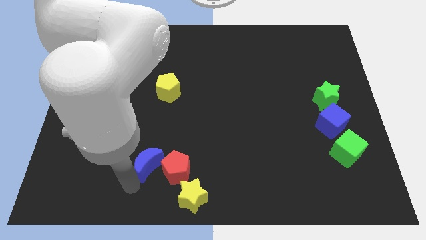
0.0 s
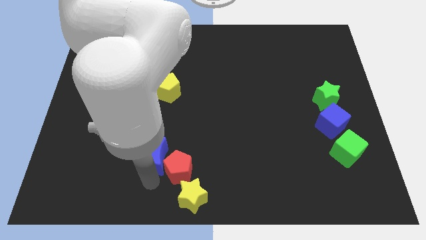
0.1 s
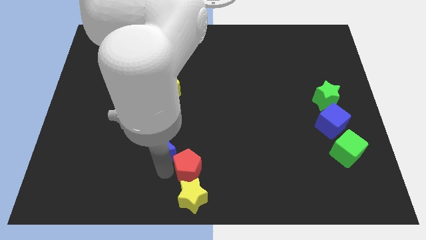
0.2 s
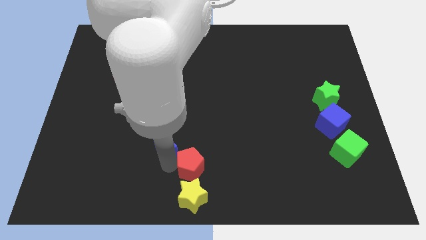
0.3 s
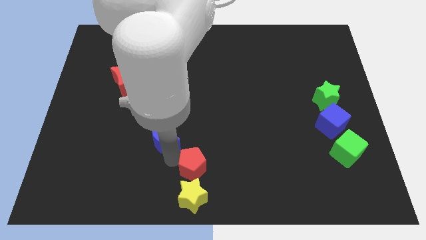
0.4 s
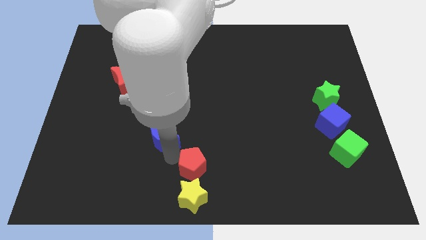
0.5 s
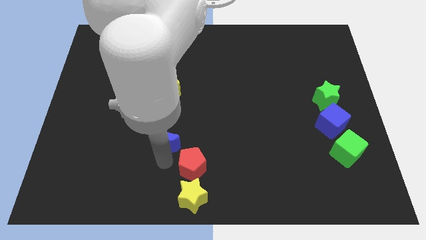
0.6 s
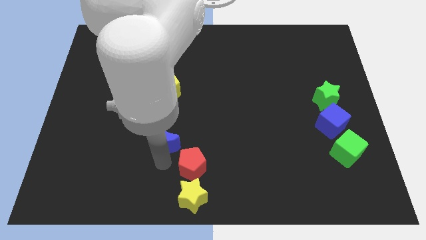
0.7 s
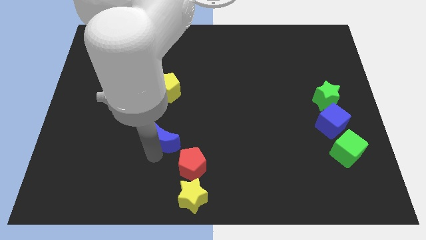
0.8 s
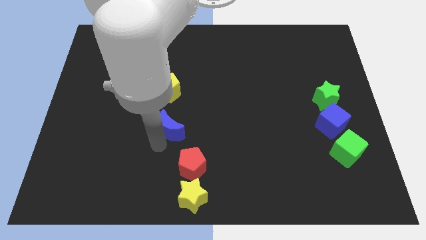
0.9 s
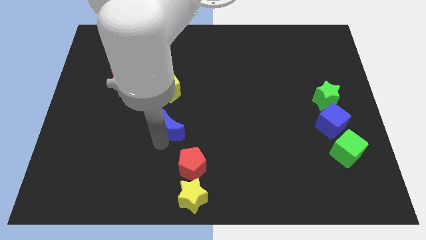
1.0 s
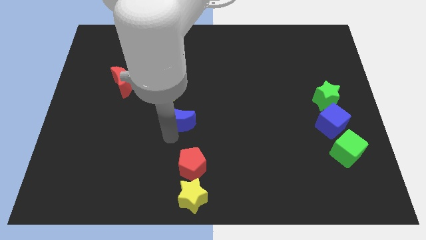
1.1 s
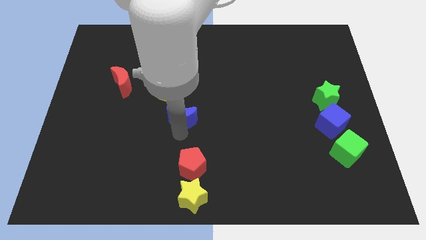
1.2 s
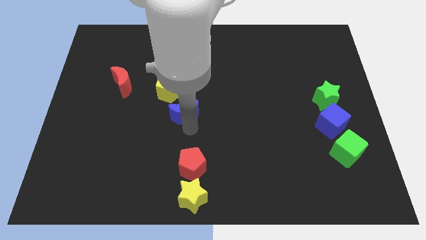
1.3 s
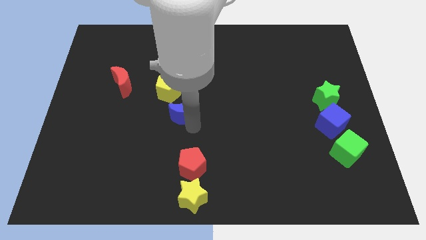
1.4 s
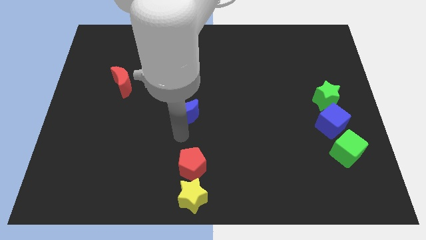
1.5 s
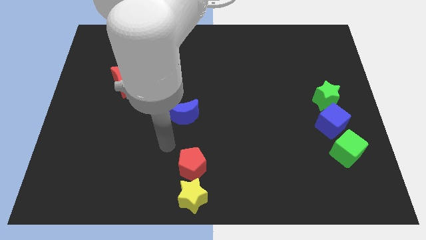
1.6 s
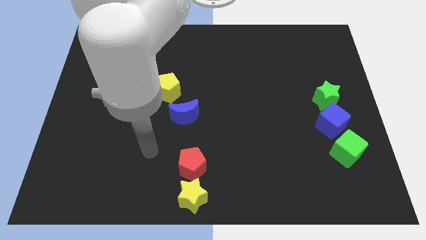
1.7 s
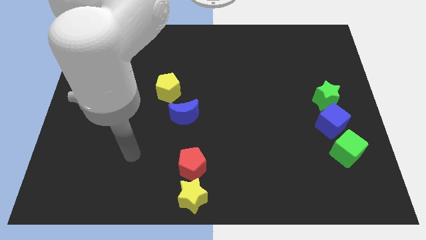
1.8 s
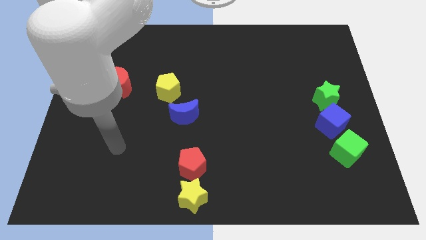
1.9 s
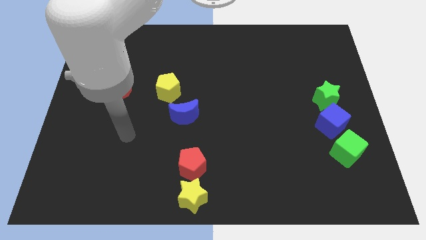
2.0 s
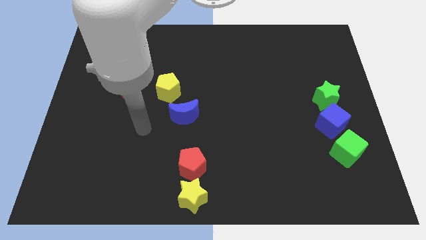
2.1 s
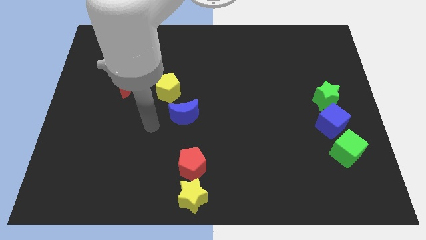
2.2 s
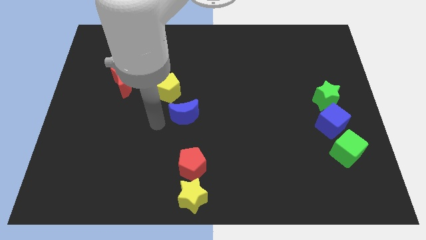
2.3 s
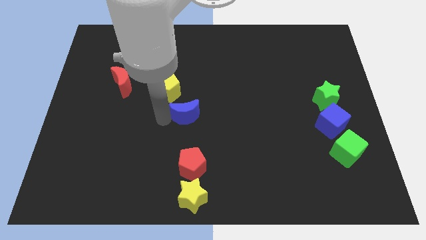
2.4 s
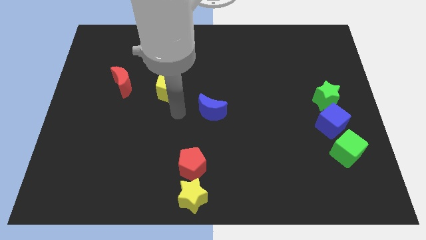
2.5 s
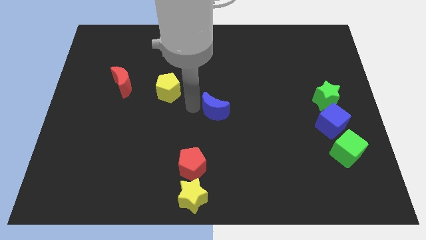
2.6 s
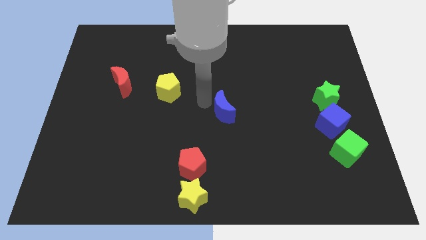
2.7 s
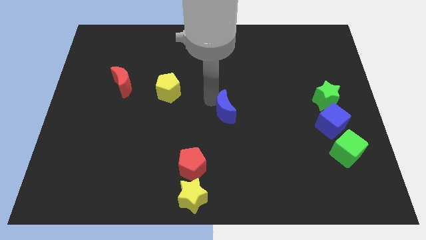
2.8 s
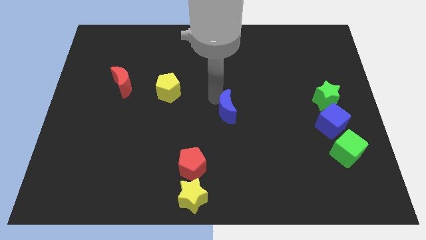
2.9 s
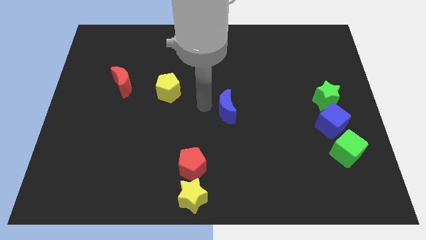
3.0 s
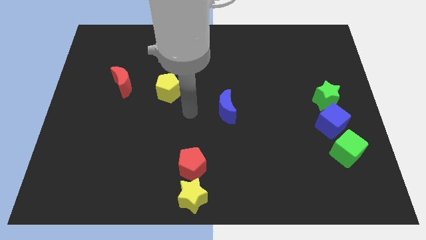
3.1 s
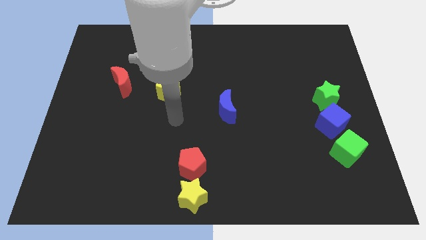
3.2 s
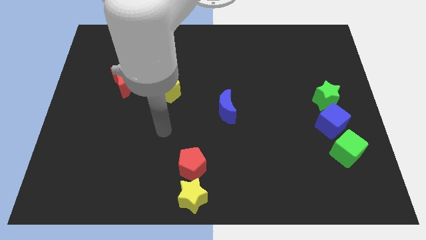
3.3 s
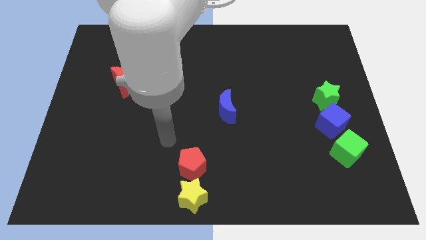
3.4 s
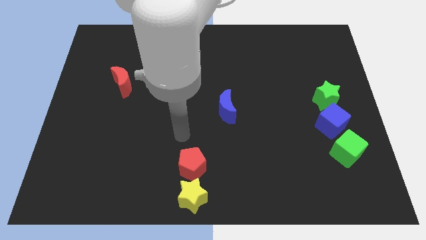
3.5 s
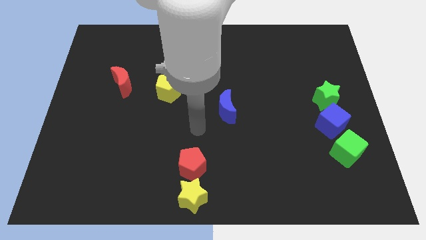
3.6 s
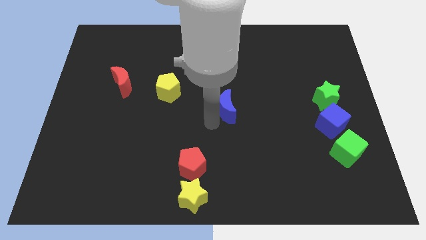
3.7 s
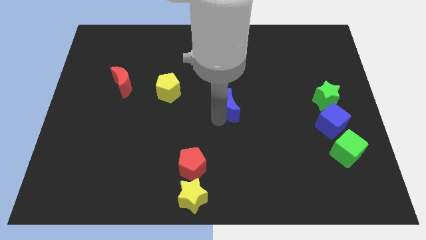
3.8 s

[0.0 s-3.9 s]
move the blue crescent to the center of the board

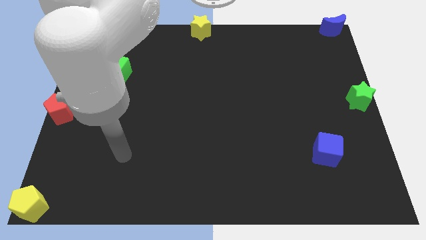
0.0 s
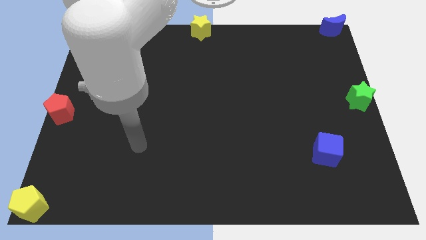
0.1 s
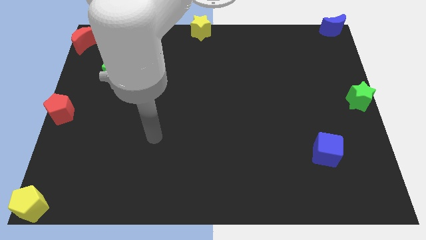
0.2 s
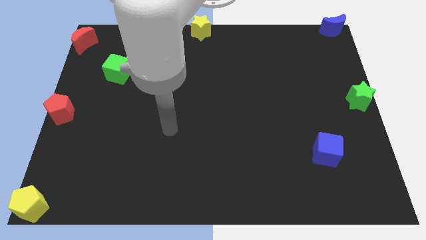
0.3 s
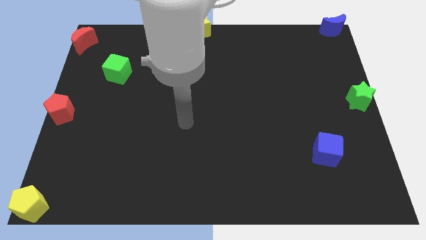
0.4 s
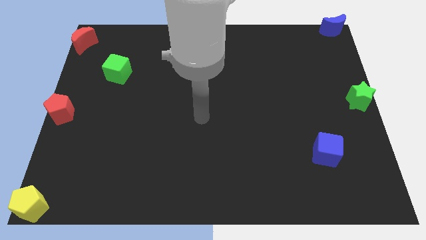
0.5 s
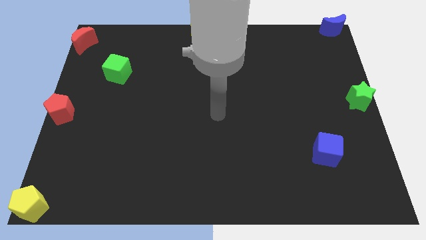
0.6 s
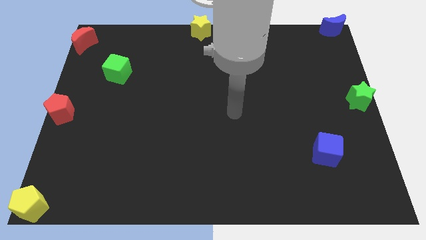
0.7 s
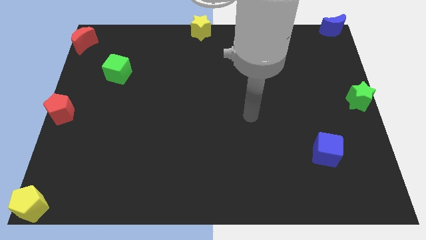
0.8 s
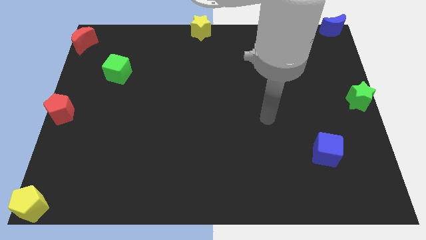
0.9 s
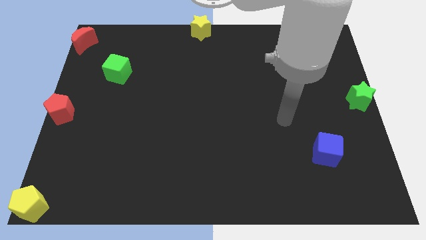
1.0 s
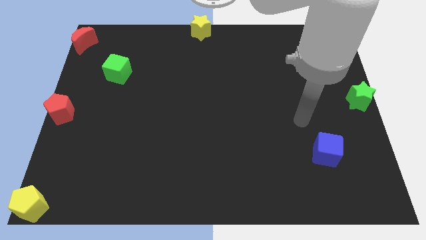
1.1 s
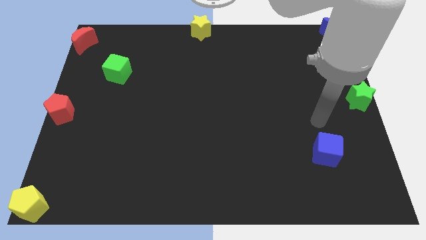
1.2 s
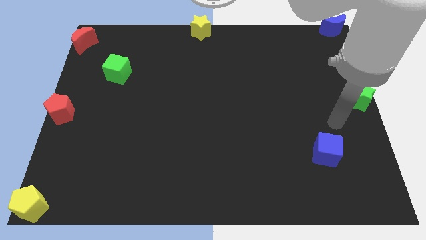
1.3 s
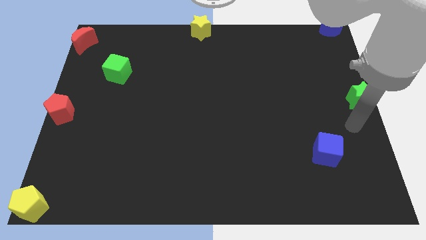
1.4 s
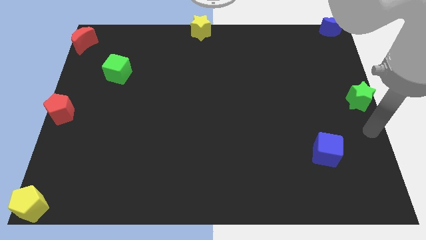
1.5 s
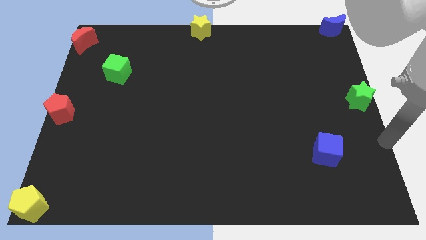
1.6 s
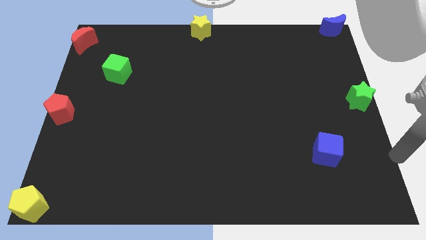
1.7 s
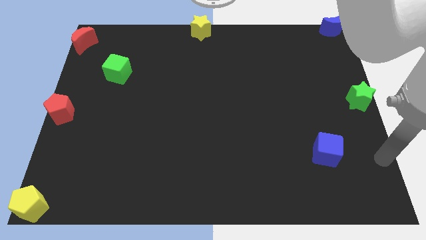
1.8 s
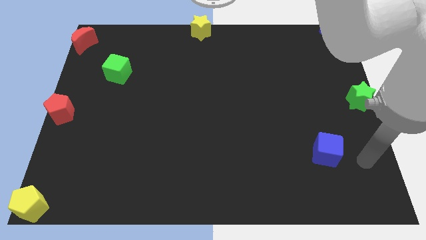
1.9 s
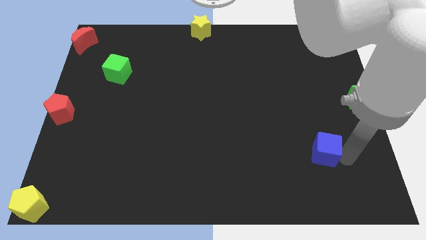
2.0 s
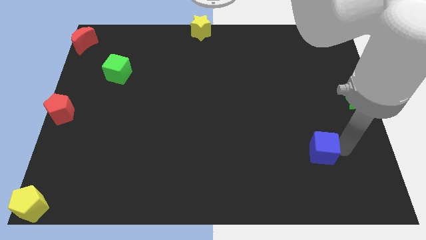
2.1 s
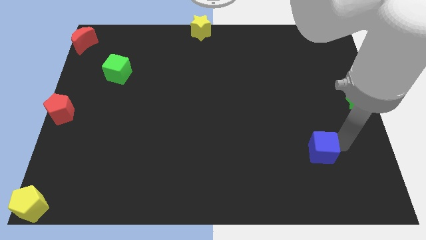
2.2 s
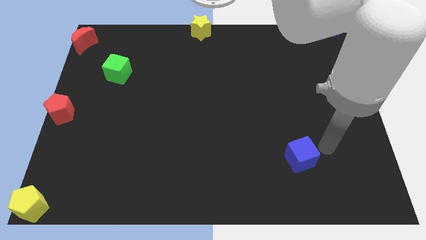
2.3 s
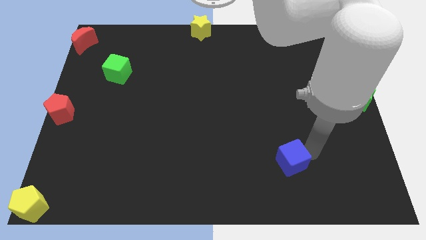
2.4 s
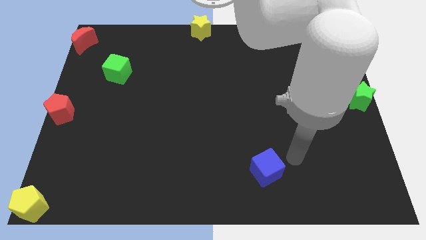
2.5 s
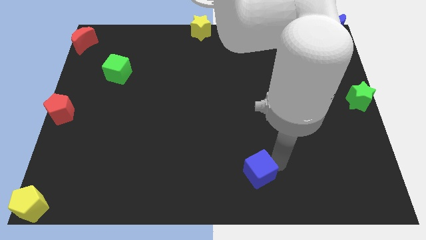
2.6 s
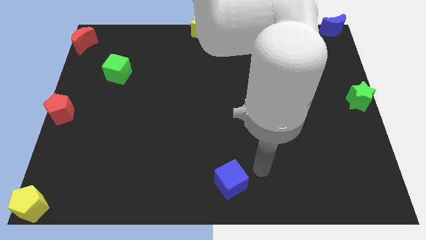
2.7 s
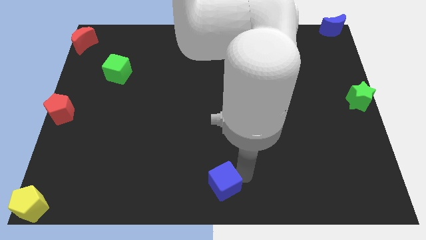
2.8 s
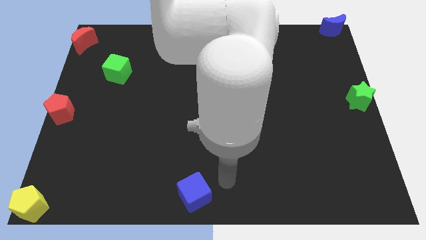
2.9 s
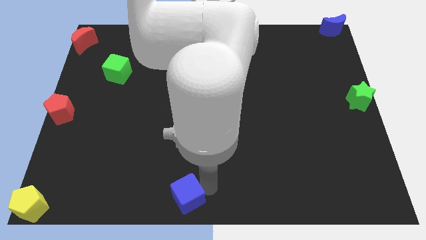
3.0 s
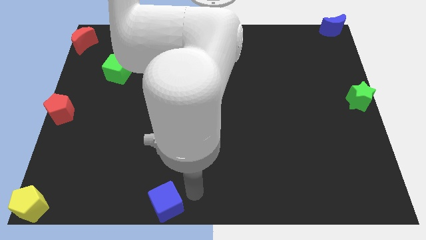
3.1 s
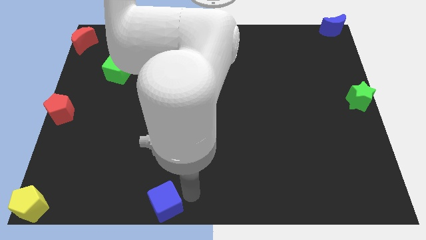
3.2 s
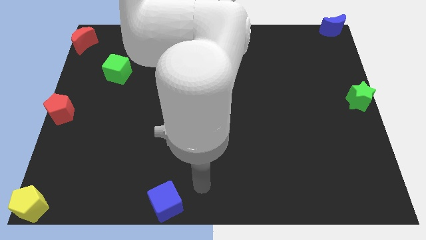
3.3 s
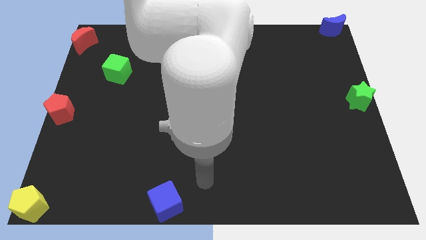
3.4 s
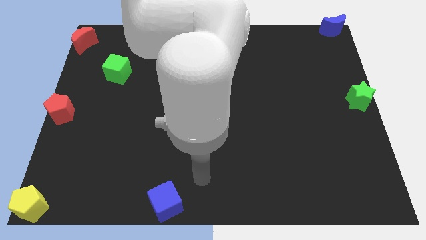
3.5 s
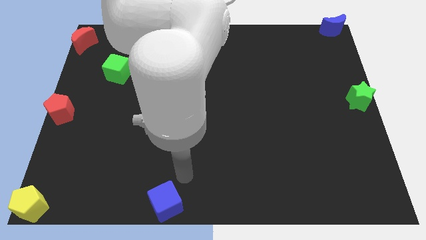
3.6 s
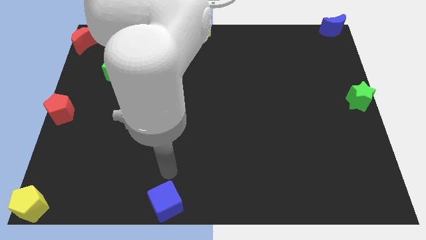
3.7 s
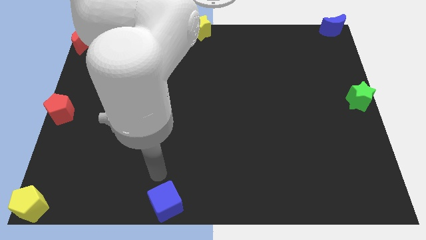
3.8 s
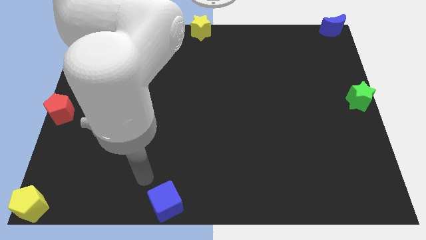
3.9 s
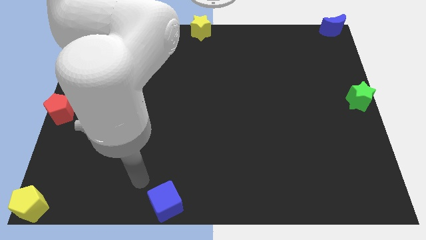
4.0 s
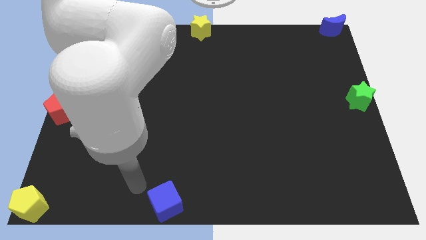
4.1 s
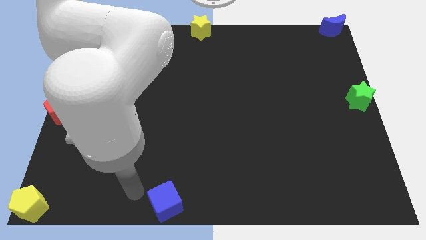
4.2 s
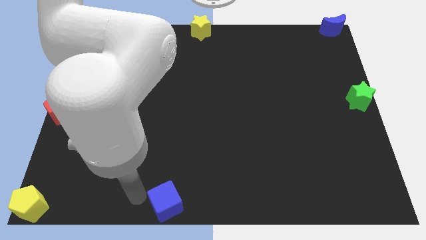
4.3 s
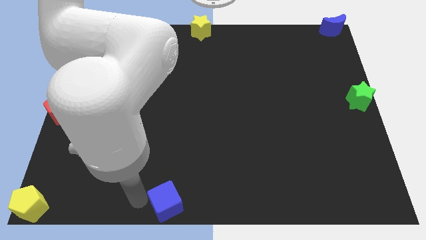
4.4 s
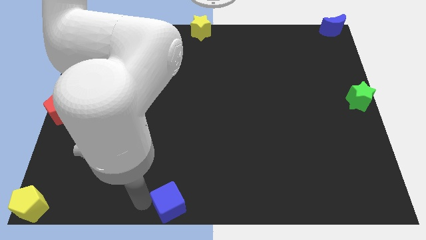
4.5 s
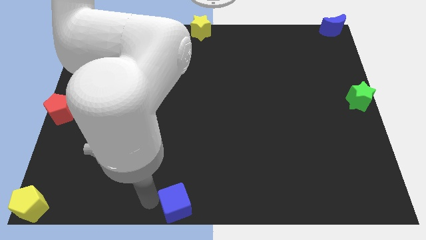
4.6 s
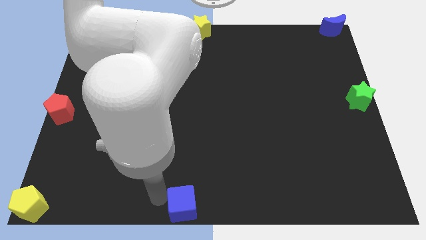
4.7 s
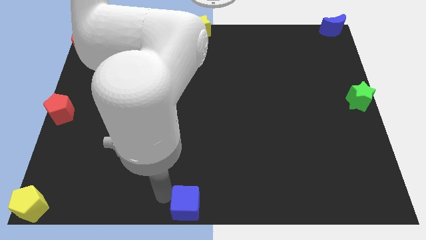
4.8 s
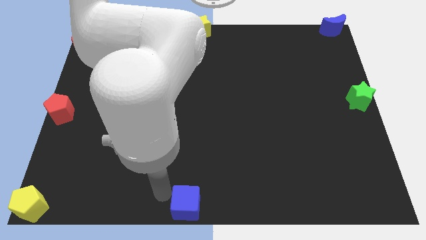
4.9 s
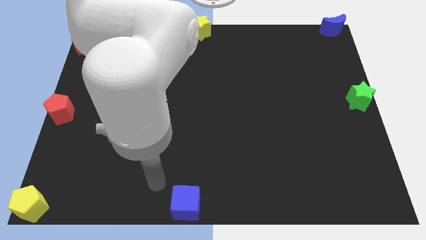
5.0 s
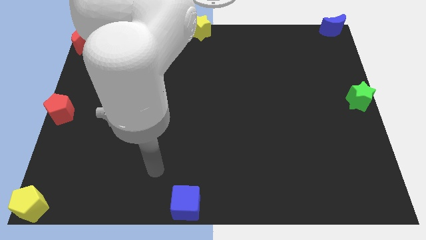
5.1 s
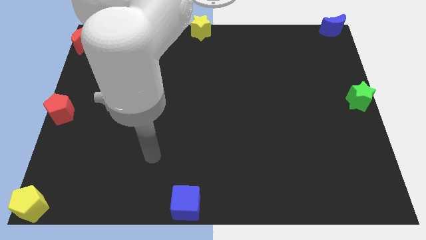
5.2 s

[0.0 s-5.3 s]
push the blue cube to the bottom center
